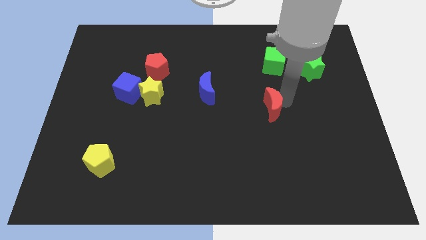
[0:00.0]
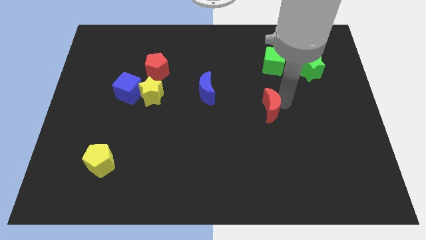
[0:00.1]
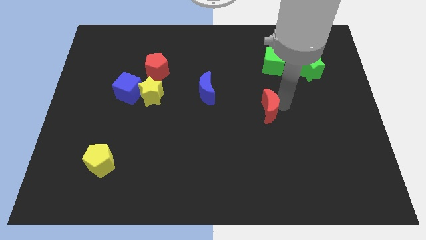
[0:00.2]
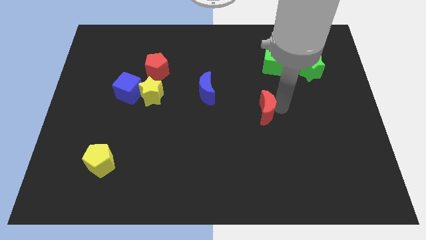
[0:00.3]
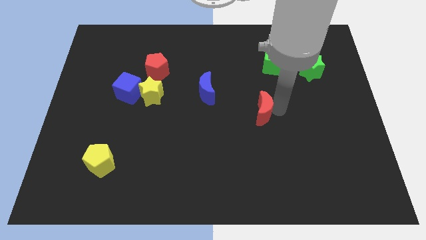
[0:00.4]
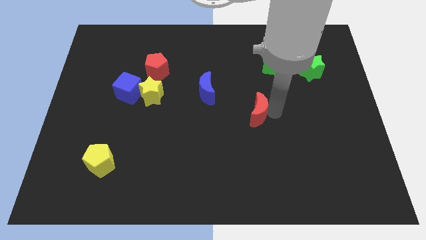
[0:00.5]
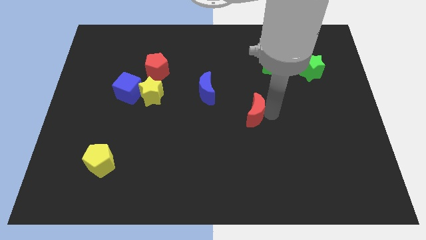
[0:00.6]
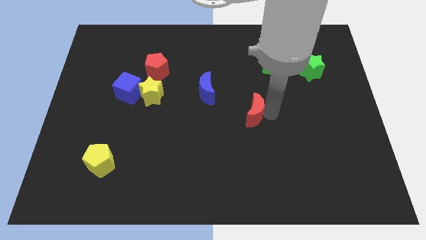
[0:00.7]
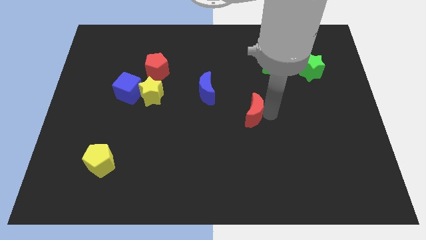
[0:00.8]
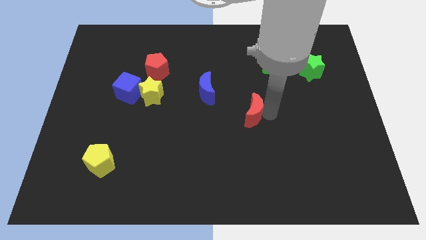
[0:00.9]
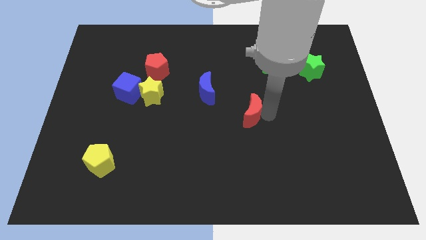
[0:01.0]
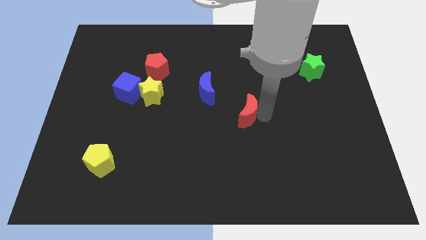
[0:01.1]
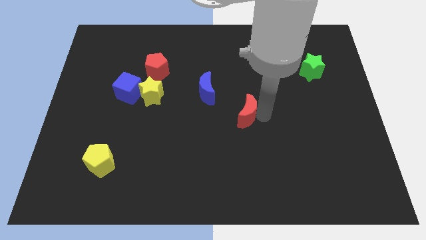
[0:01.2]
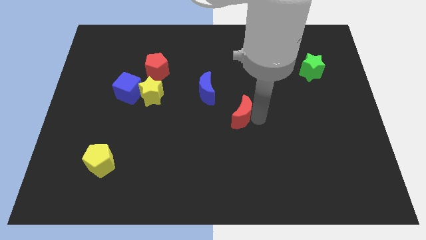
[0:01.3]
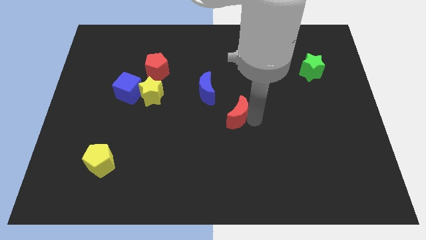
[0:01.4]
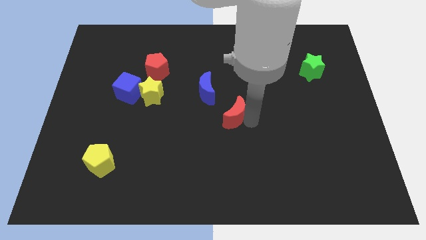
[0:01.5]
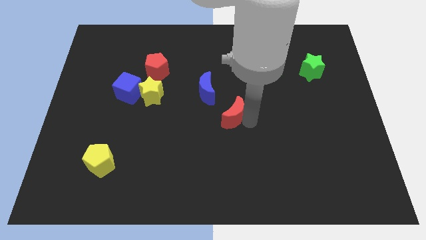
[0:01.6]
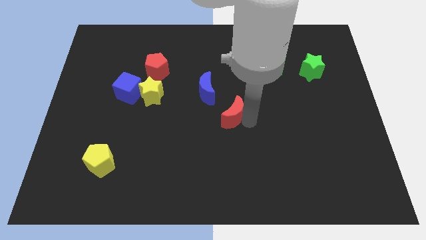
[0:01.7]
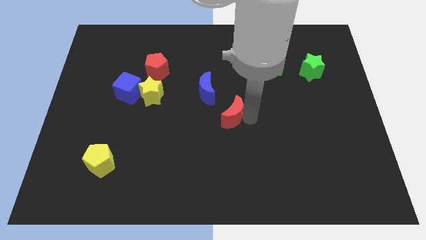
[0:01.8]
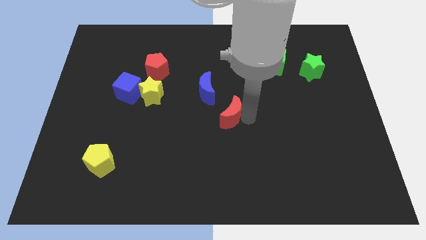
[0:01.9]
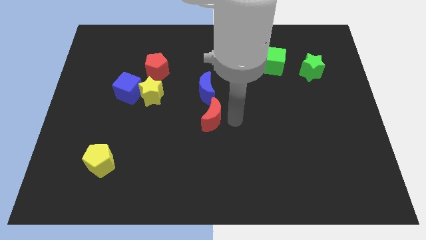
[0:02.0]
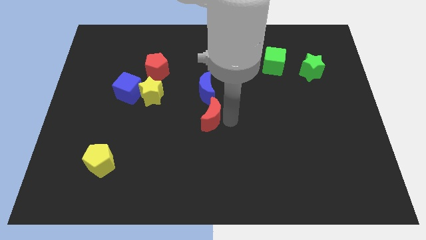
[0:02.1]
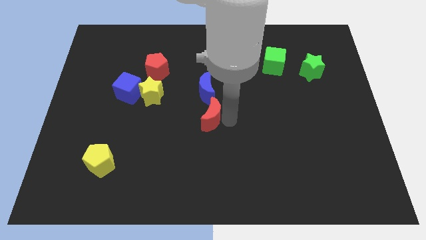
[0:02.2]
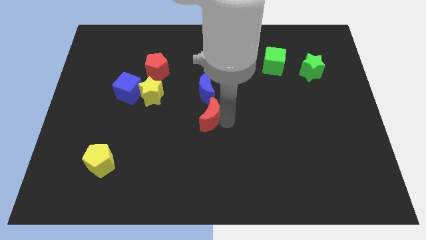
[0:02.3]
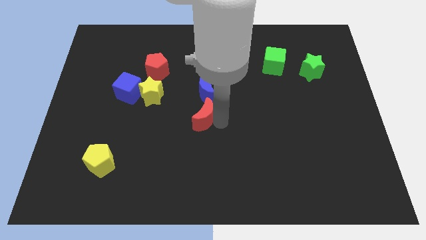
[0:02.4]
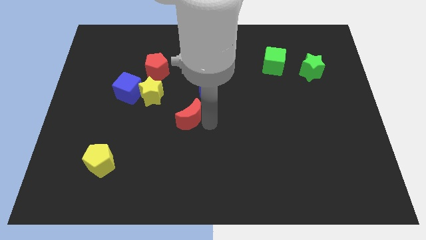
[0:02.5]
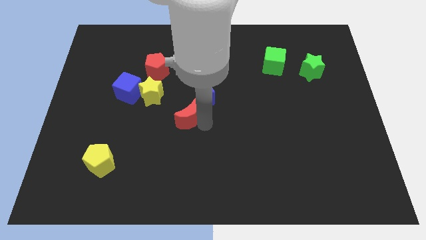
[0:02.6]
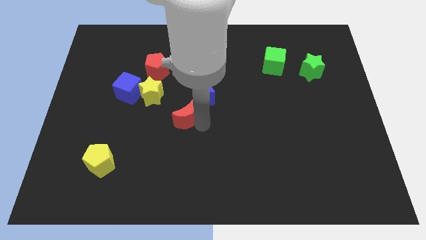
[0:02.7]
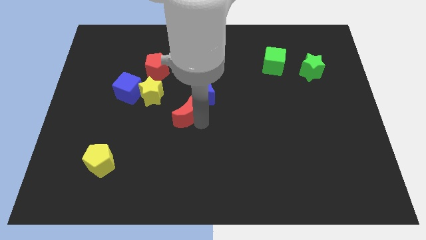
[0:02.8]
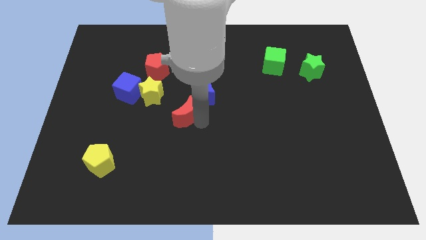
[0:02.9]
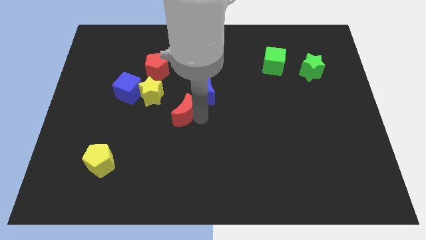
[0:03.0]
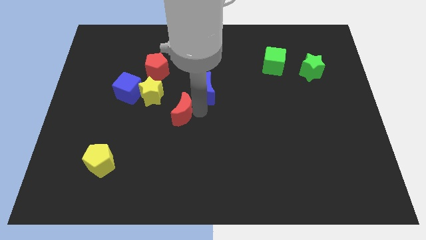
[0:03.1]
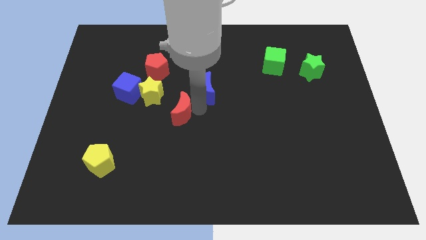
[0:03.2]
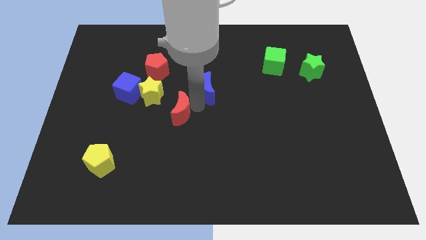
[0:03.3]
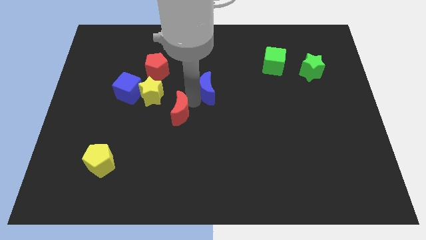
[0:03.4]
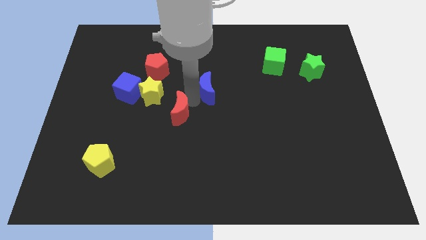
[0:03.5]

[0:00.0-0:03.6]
move the red crescent to the bottom right of the yellow star

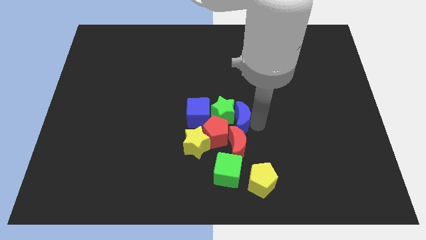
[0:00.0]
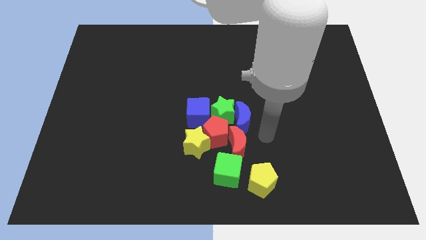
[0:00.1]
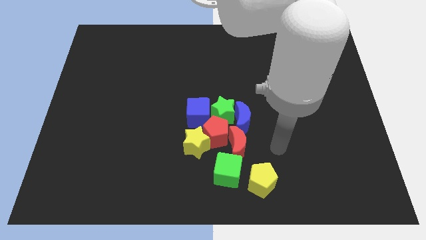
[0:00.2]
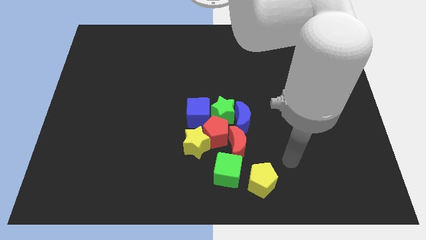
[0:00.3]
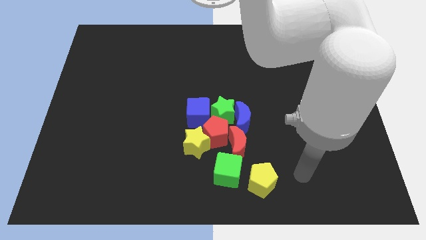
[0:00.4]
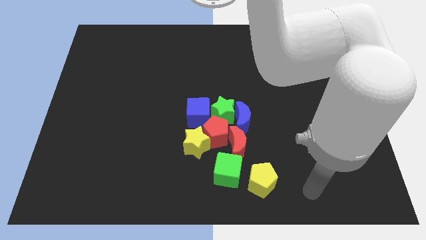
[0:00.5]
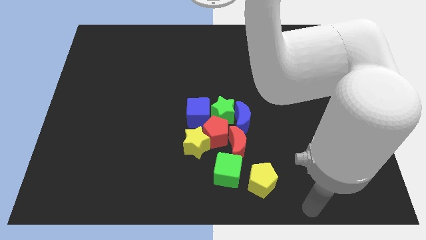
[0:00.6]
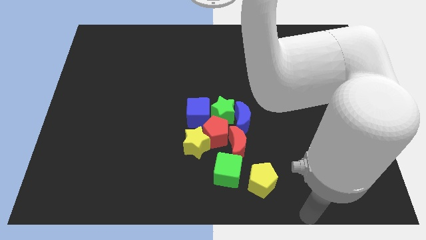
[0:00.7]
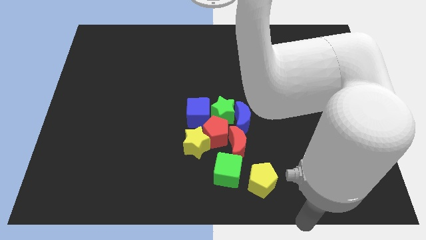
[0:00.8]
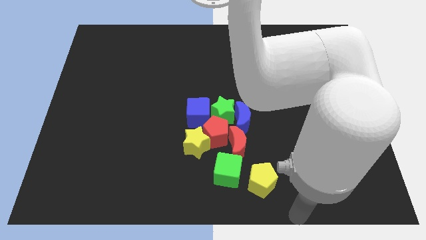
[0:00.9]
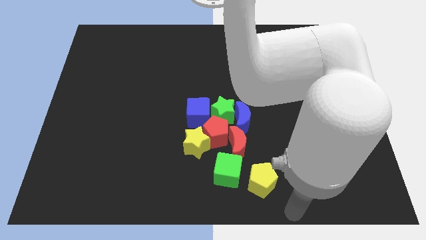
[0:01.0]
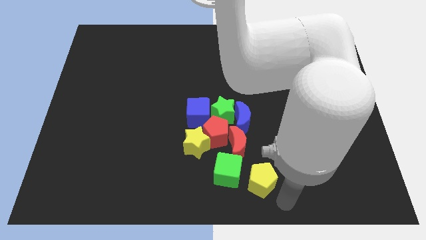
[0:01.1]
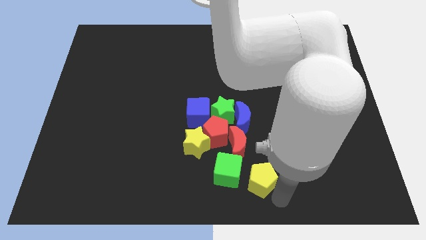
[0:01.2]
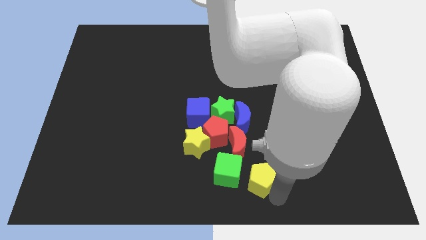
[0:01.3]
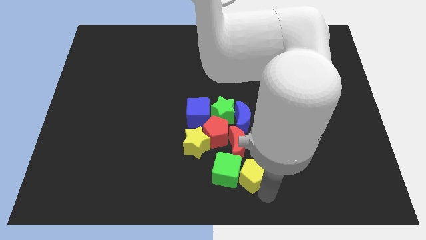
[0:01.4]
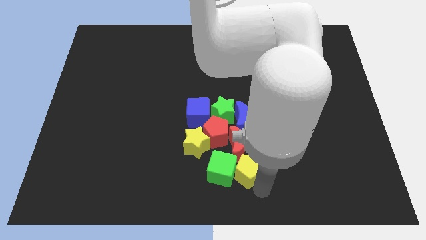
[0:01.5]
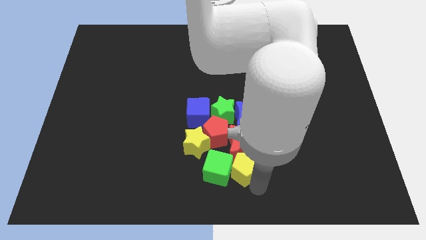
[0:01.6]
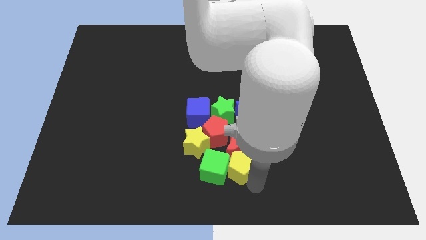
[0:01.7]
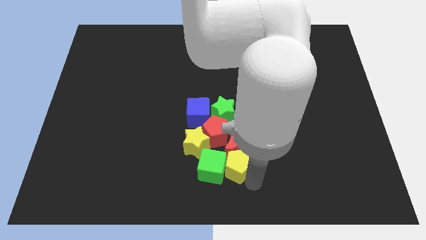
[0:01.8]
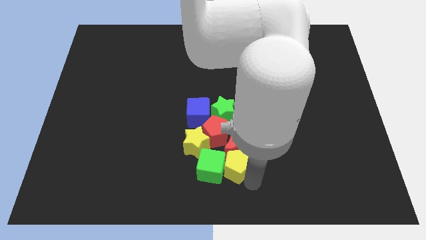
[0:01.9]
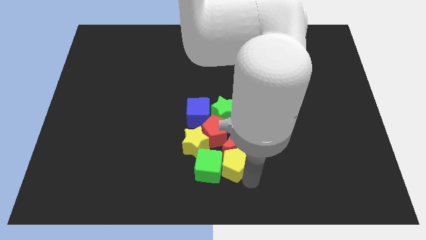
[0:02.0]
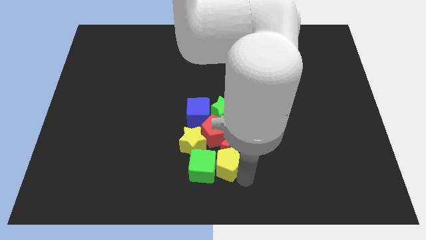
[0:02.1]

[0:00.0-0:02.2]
make a group of all blocks at the center of the board

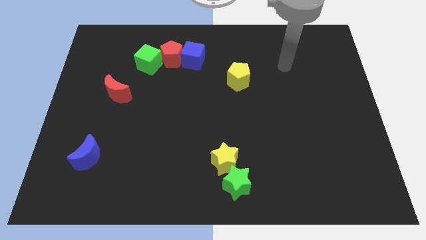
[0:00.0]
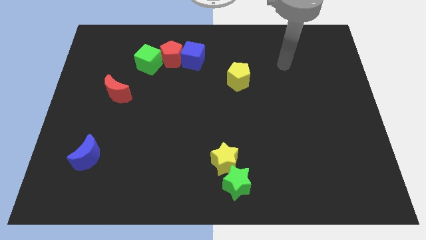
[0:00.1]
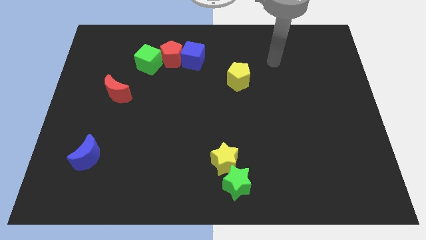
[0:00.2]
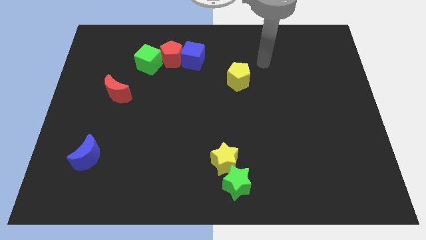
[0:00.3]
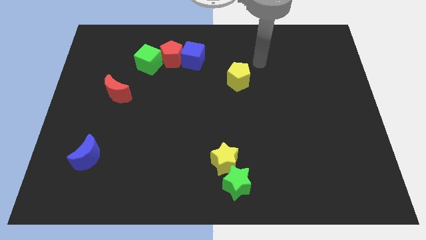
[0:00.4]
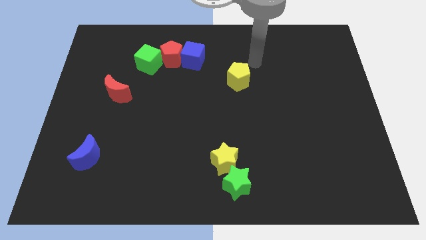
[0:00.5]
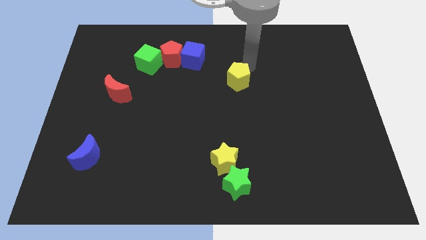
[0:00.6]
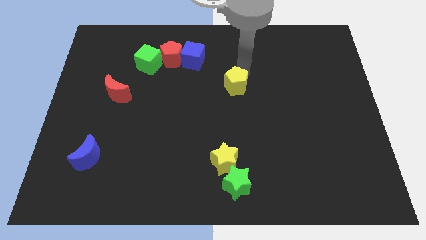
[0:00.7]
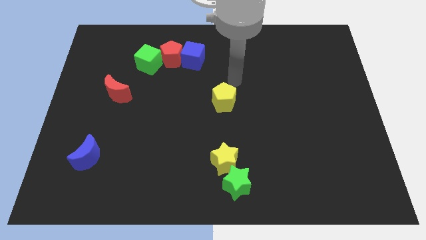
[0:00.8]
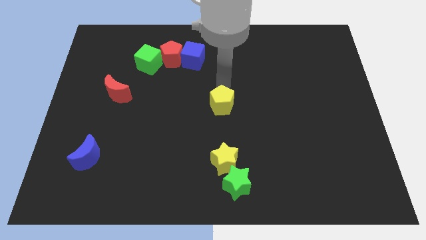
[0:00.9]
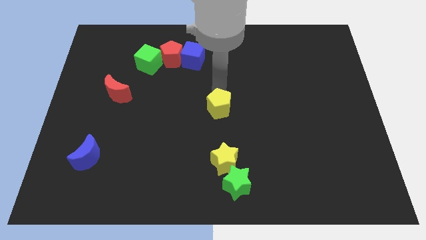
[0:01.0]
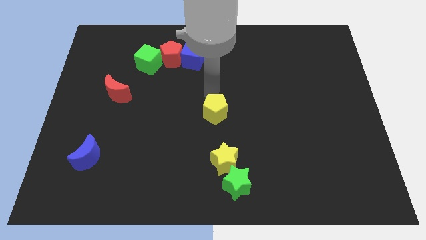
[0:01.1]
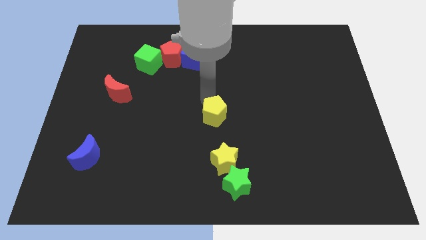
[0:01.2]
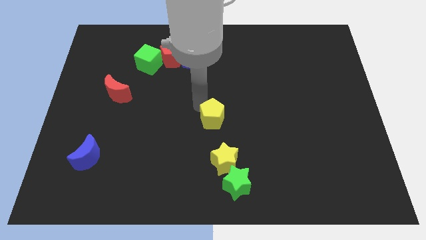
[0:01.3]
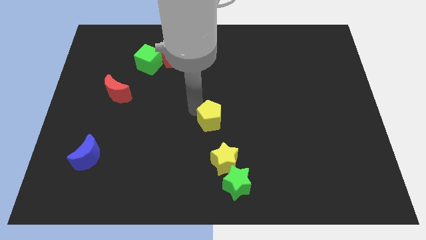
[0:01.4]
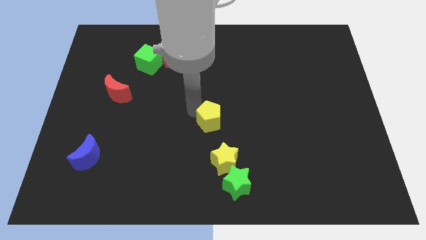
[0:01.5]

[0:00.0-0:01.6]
move the yellow pentagon towards the yellow star

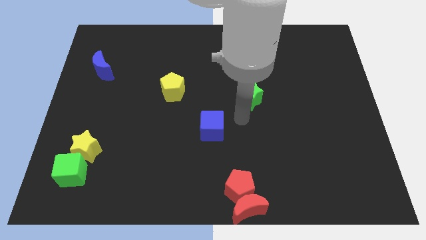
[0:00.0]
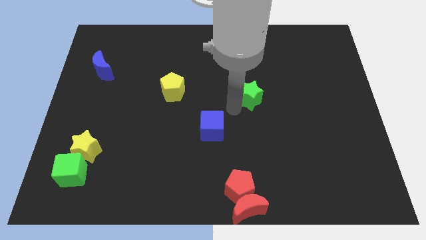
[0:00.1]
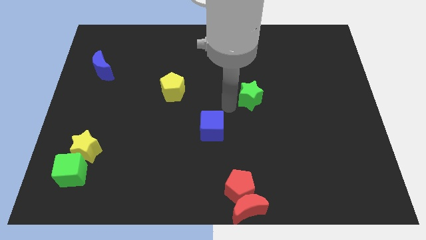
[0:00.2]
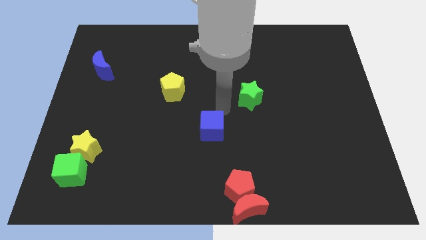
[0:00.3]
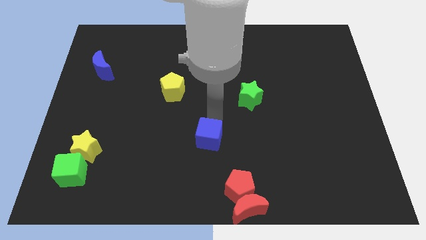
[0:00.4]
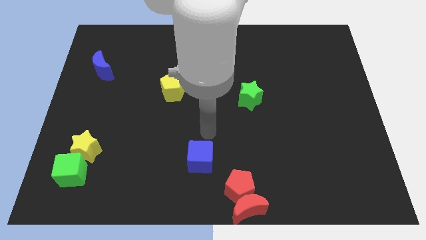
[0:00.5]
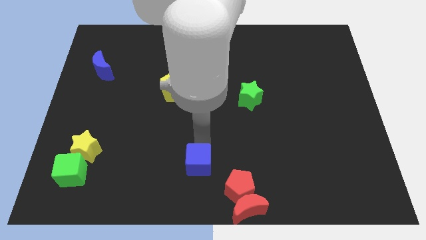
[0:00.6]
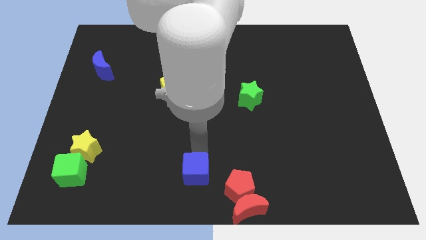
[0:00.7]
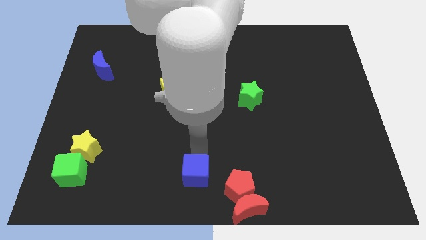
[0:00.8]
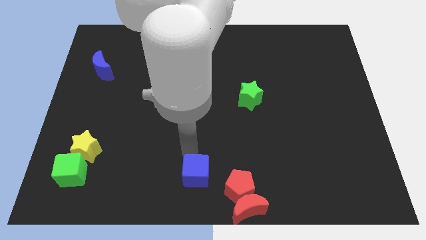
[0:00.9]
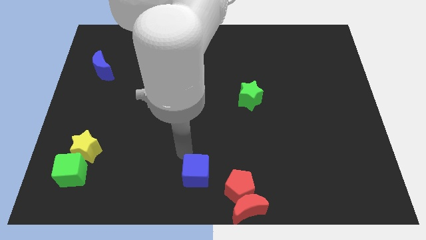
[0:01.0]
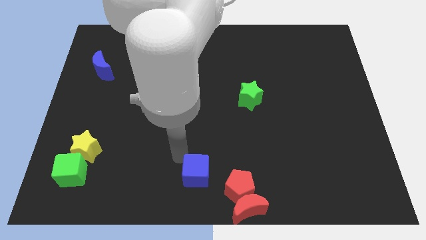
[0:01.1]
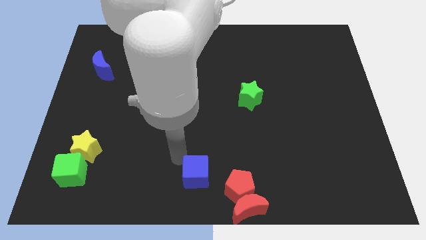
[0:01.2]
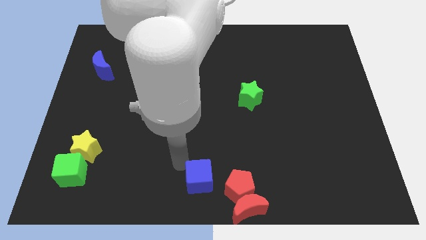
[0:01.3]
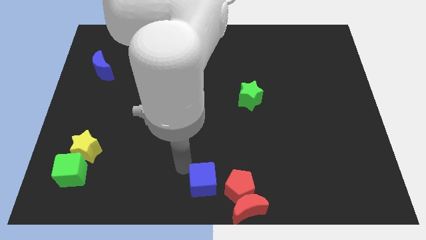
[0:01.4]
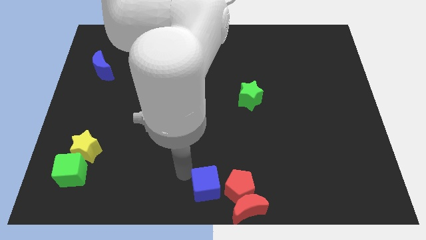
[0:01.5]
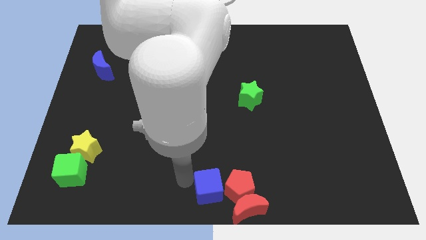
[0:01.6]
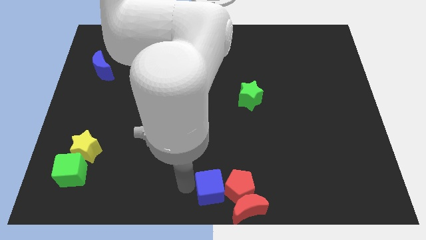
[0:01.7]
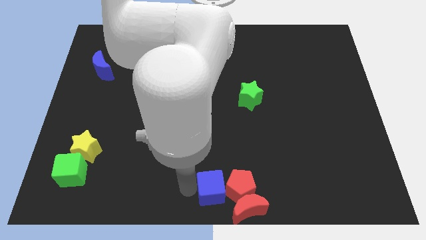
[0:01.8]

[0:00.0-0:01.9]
place blue cube beside red pentagon
